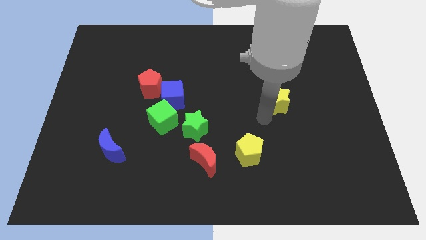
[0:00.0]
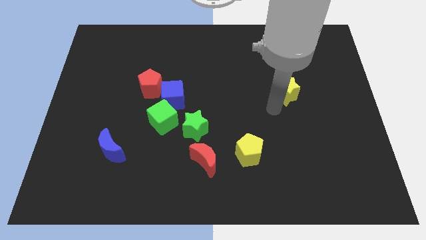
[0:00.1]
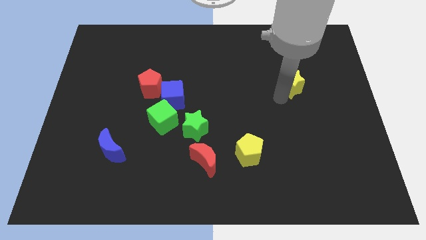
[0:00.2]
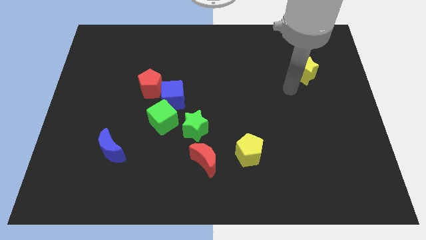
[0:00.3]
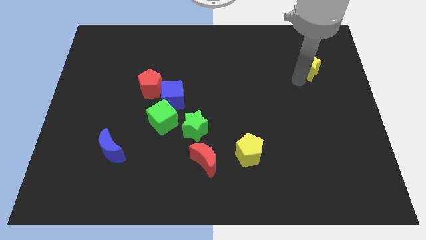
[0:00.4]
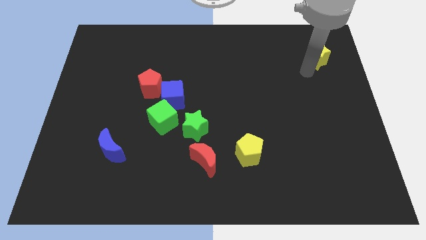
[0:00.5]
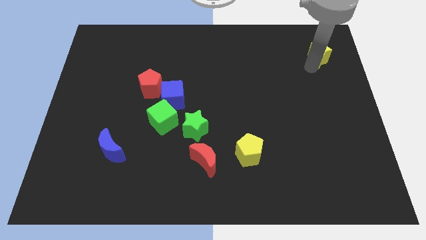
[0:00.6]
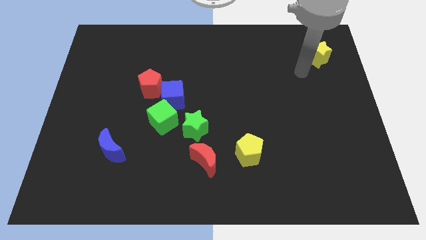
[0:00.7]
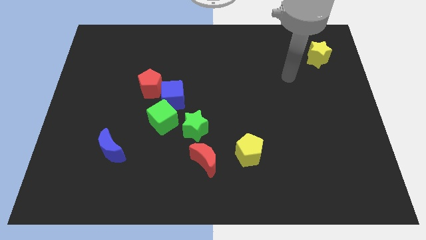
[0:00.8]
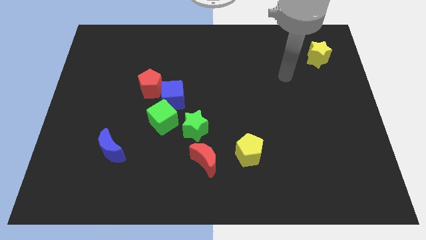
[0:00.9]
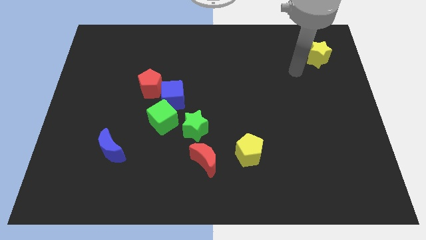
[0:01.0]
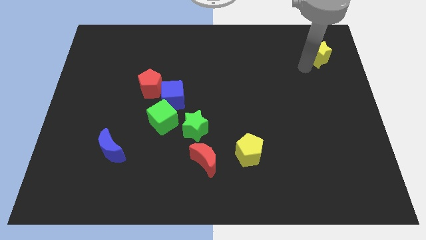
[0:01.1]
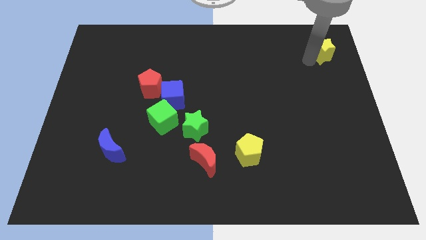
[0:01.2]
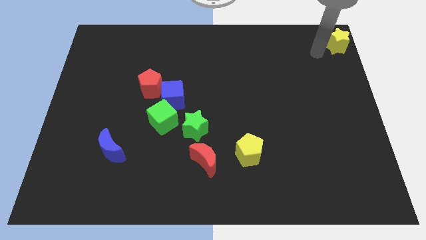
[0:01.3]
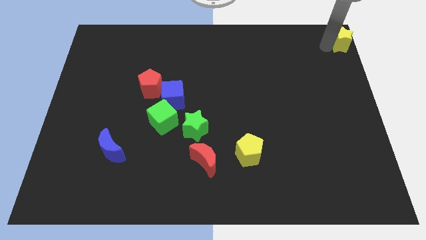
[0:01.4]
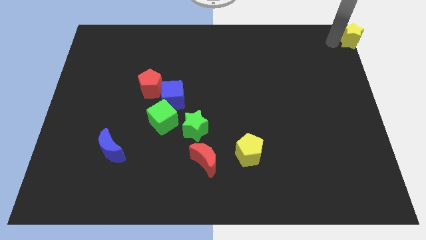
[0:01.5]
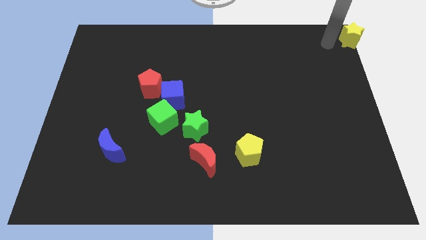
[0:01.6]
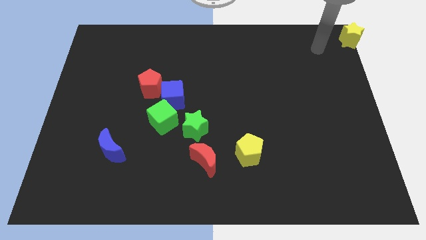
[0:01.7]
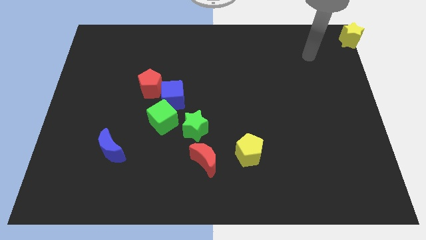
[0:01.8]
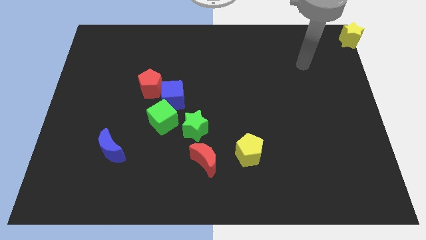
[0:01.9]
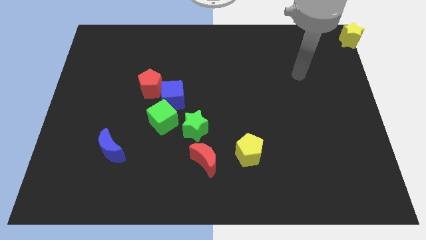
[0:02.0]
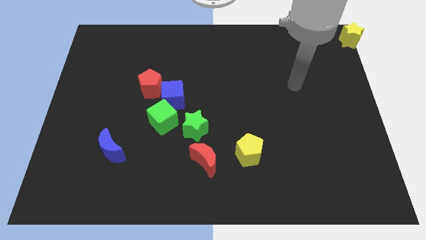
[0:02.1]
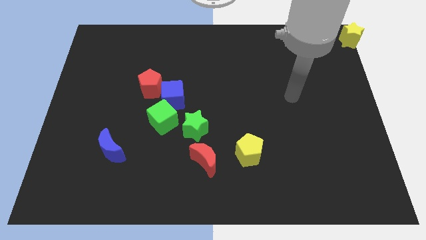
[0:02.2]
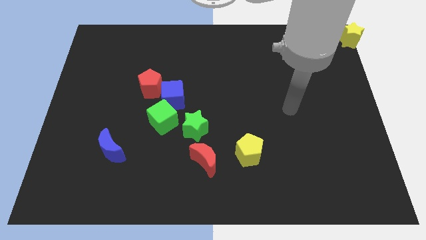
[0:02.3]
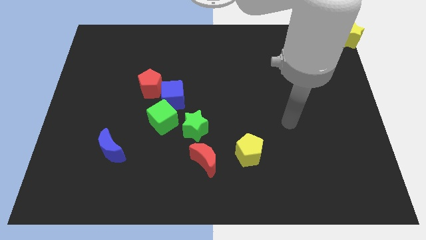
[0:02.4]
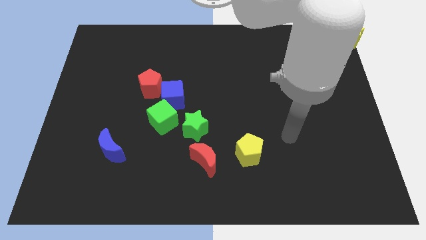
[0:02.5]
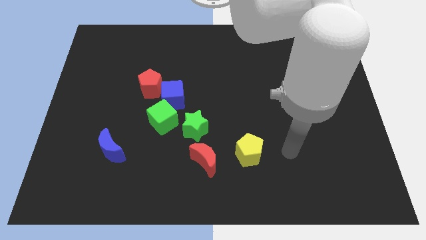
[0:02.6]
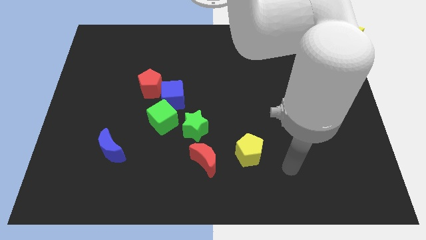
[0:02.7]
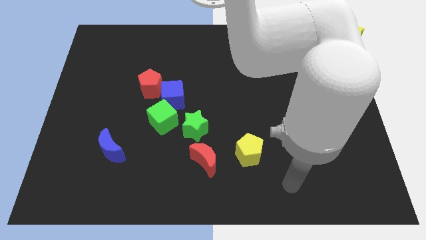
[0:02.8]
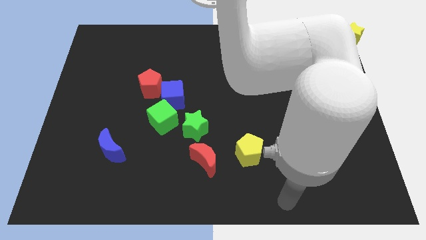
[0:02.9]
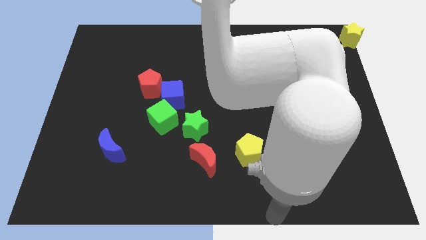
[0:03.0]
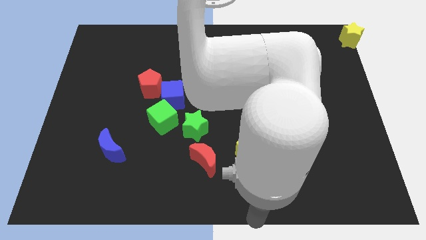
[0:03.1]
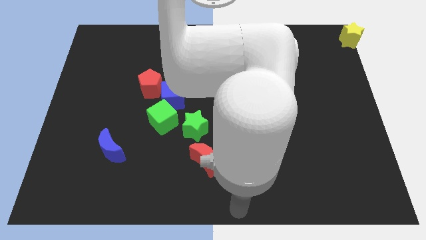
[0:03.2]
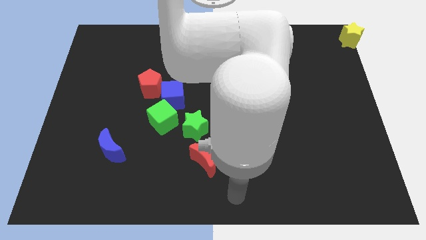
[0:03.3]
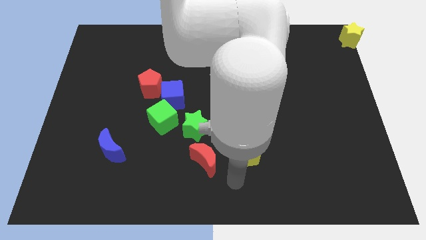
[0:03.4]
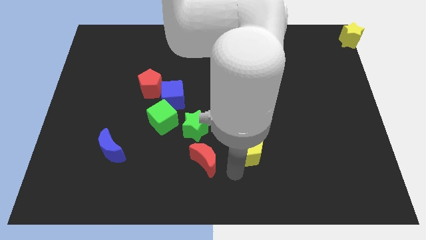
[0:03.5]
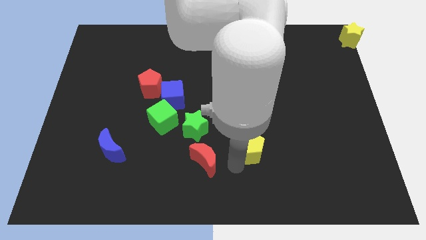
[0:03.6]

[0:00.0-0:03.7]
place the yellow star towards the top right corner of the board

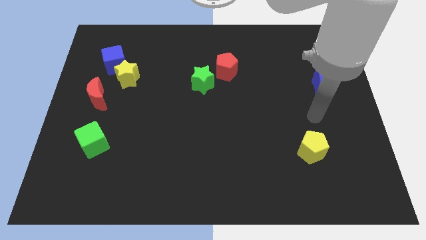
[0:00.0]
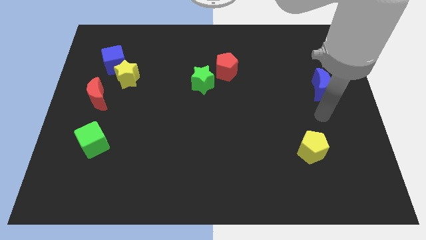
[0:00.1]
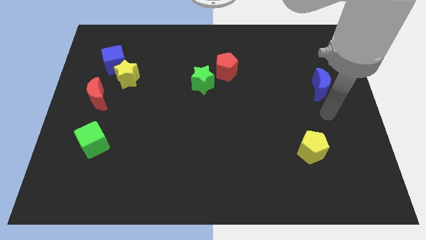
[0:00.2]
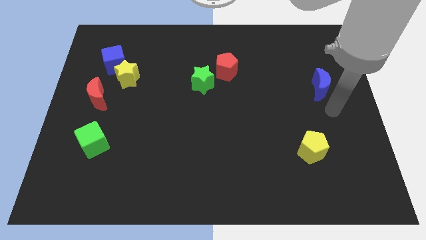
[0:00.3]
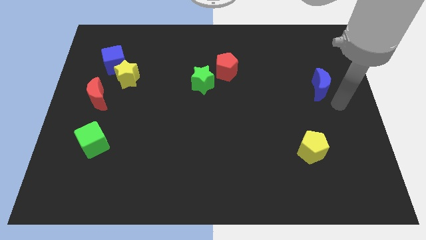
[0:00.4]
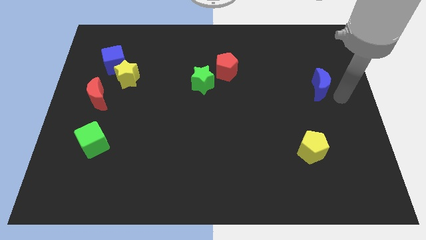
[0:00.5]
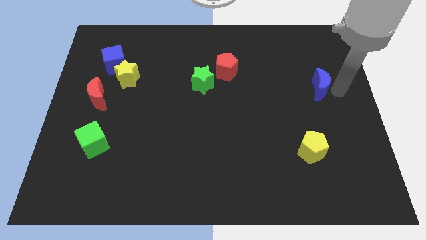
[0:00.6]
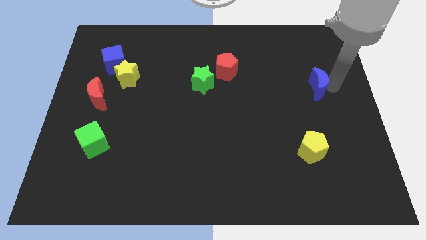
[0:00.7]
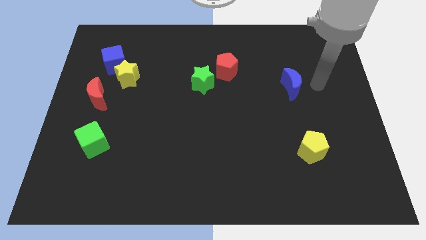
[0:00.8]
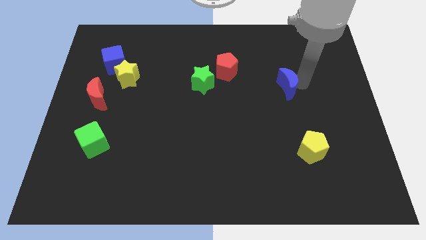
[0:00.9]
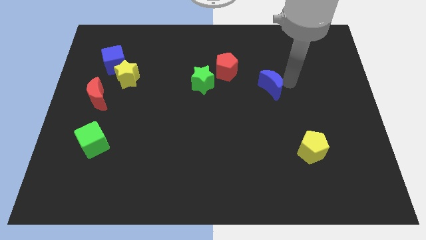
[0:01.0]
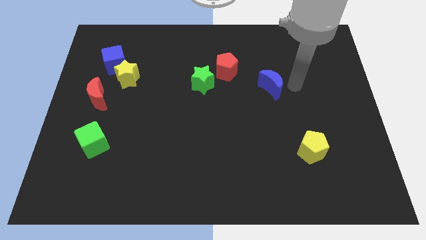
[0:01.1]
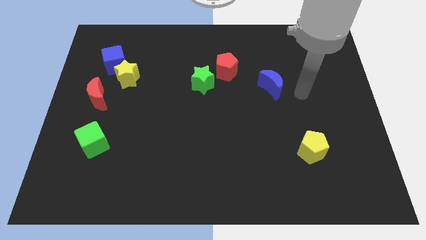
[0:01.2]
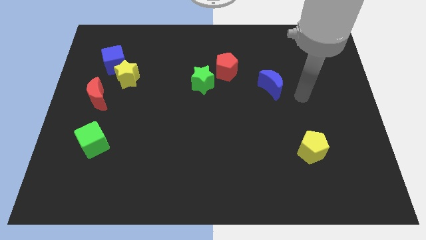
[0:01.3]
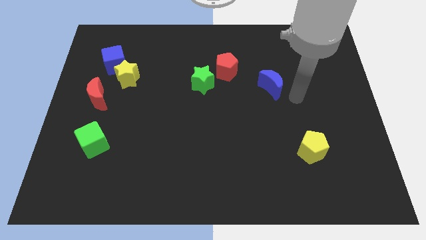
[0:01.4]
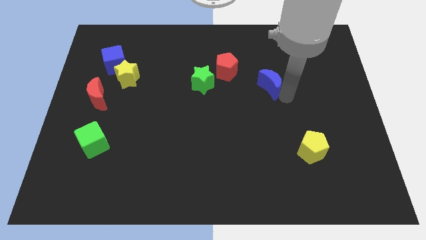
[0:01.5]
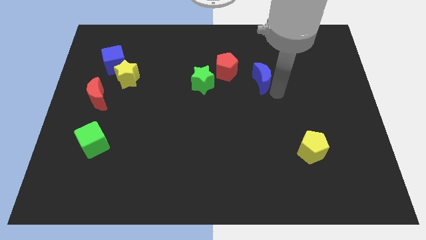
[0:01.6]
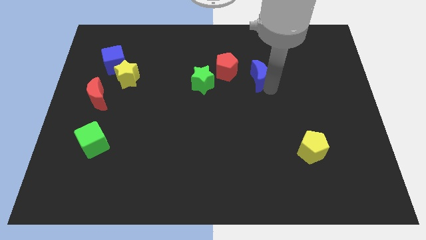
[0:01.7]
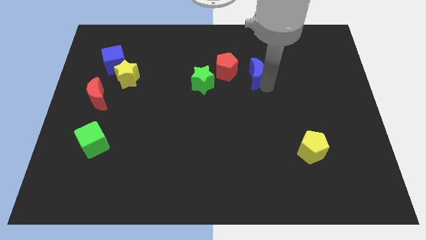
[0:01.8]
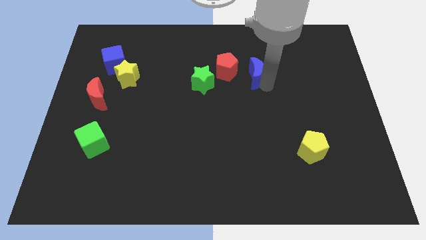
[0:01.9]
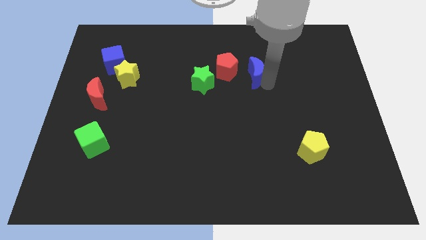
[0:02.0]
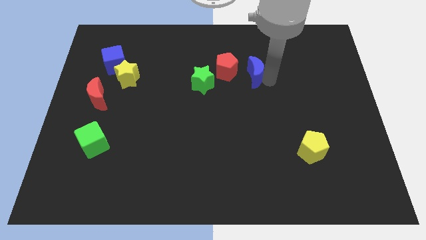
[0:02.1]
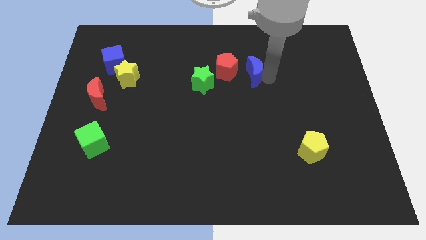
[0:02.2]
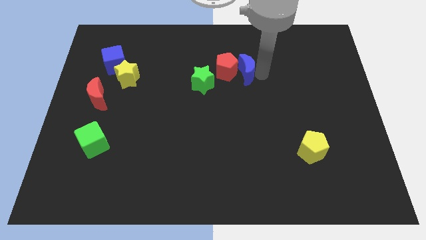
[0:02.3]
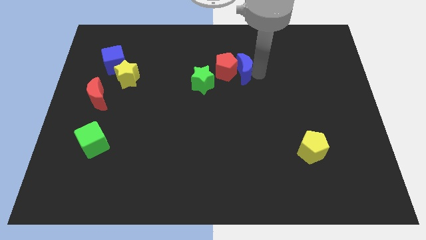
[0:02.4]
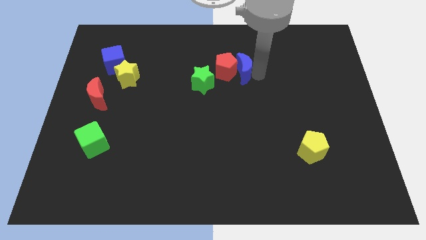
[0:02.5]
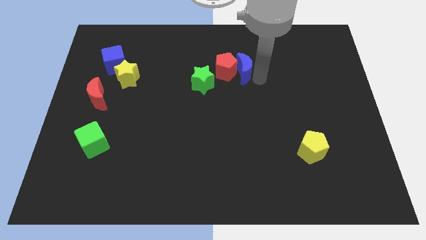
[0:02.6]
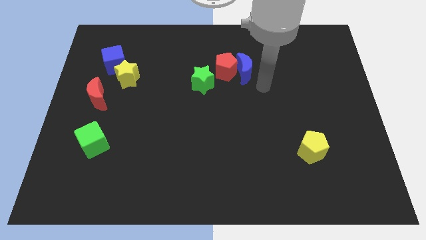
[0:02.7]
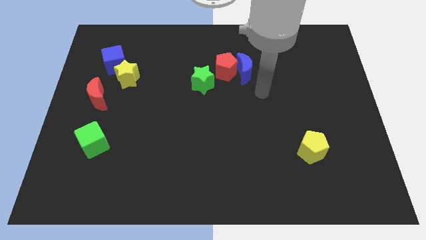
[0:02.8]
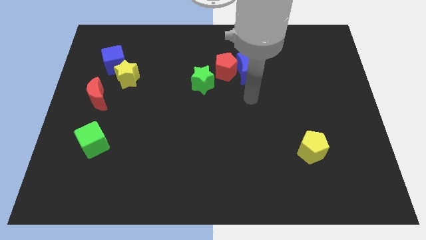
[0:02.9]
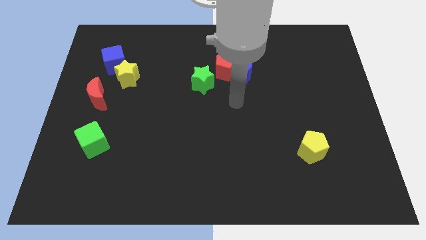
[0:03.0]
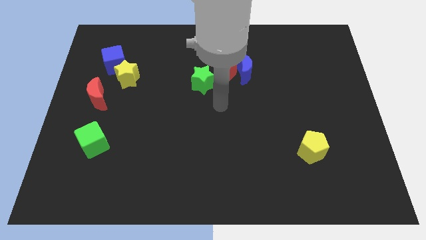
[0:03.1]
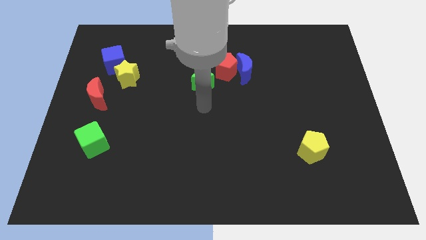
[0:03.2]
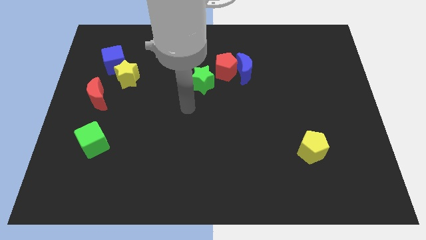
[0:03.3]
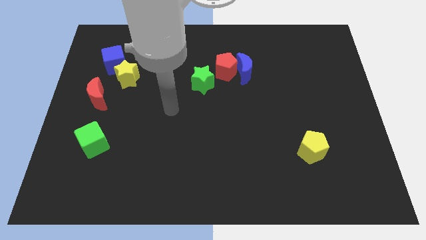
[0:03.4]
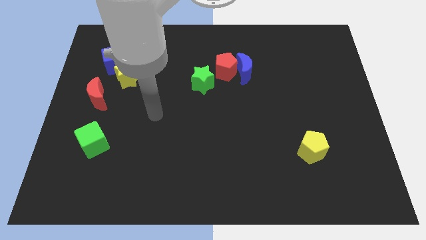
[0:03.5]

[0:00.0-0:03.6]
move the blue crescent into the red pentagon

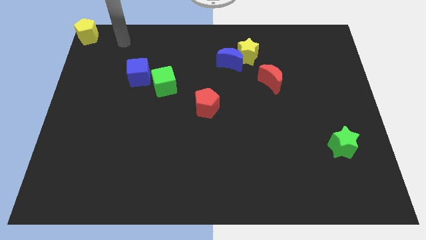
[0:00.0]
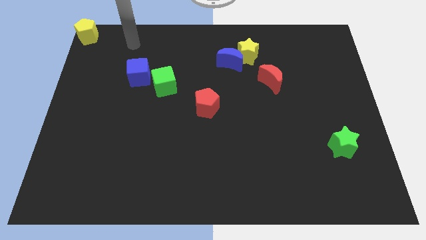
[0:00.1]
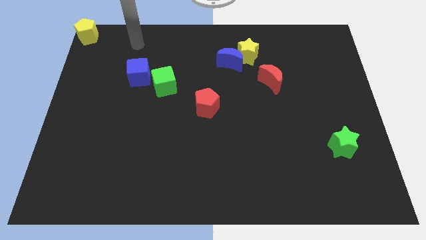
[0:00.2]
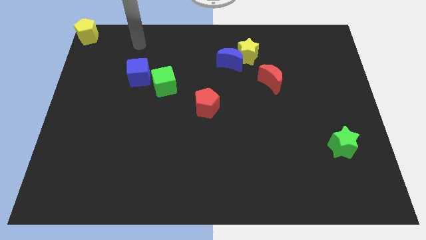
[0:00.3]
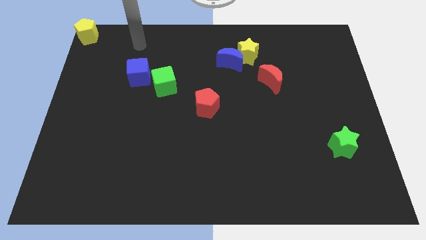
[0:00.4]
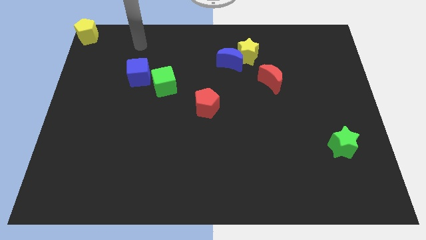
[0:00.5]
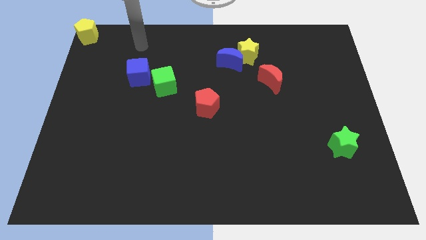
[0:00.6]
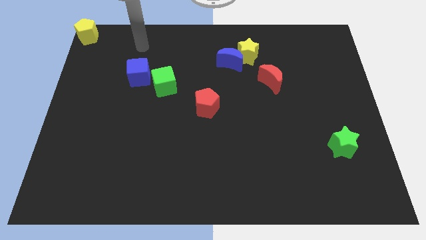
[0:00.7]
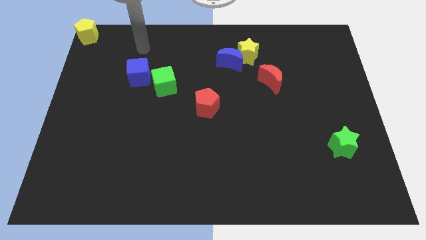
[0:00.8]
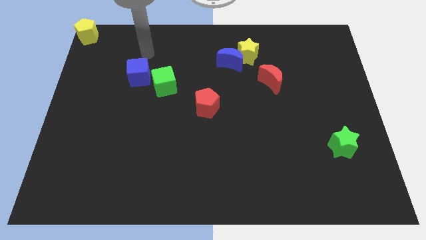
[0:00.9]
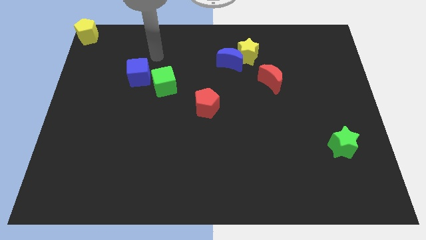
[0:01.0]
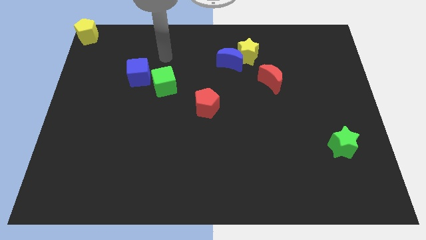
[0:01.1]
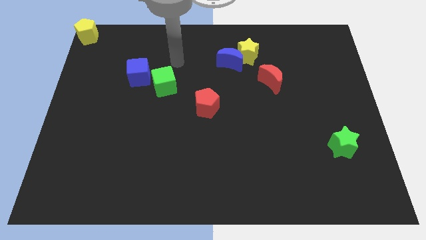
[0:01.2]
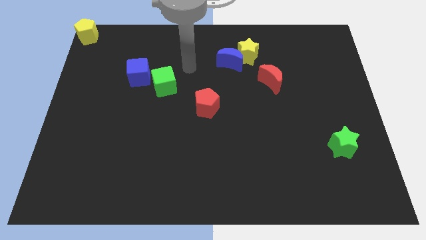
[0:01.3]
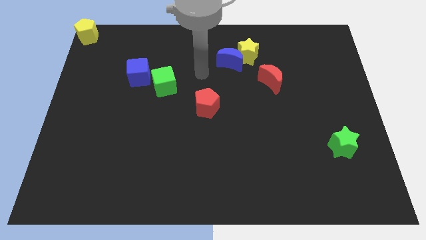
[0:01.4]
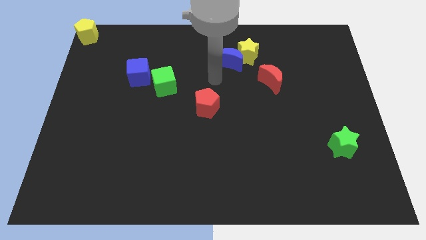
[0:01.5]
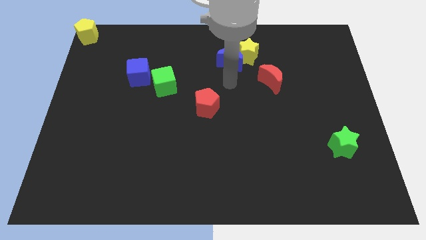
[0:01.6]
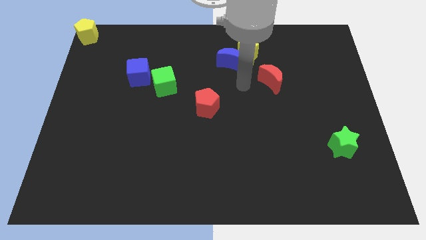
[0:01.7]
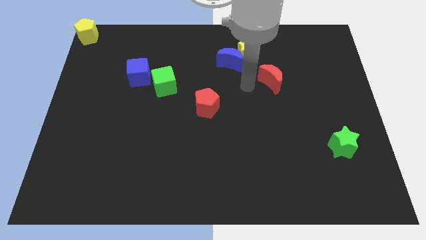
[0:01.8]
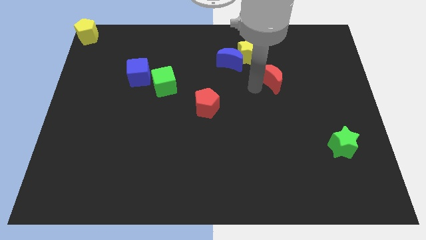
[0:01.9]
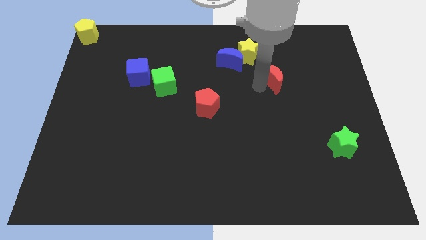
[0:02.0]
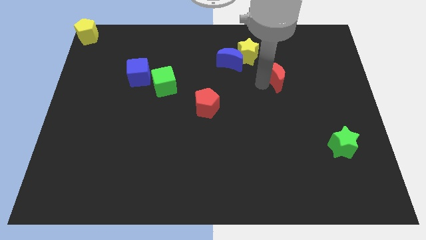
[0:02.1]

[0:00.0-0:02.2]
tap the red crescent
